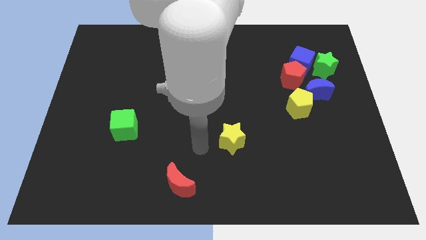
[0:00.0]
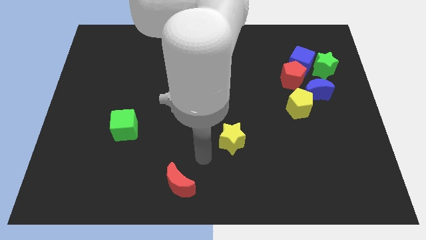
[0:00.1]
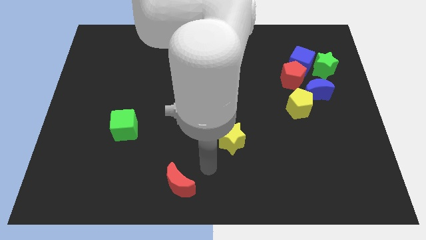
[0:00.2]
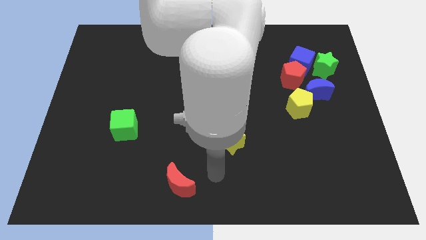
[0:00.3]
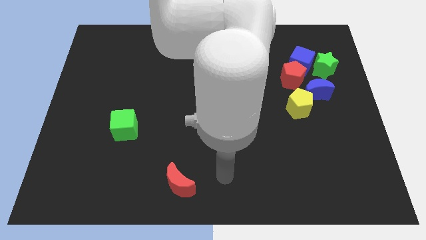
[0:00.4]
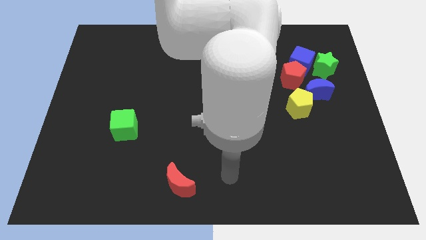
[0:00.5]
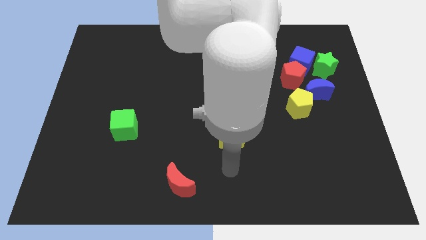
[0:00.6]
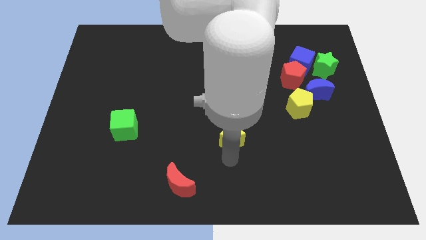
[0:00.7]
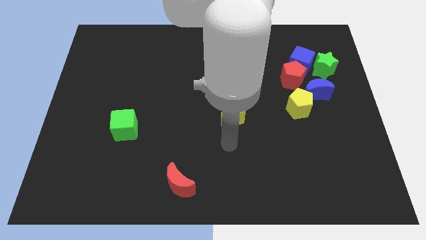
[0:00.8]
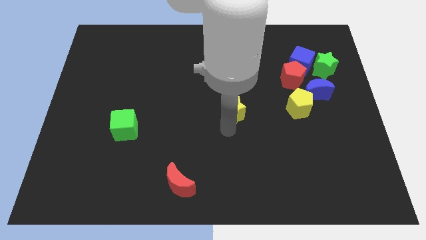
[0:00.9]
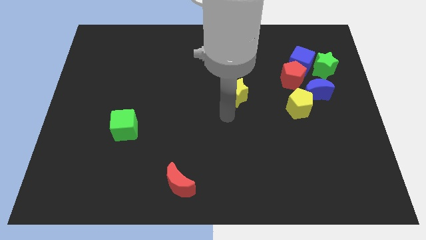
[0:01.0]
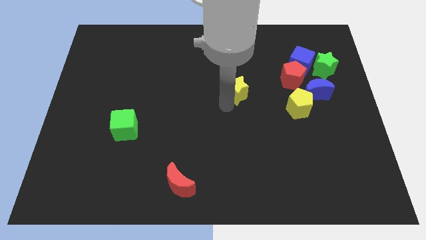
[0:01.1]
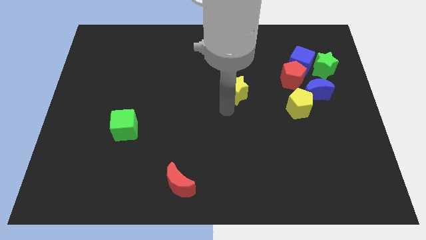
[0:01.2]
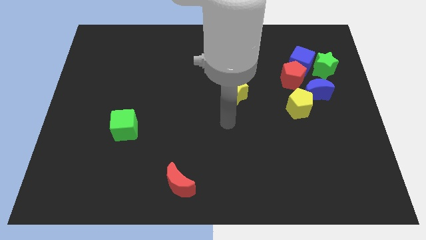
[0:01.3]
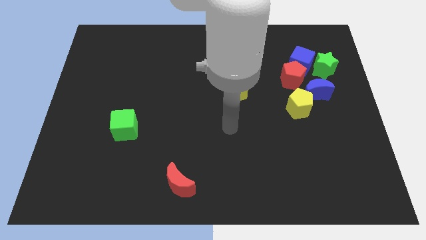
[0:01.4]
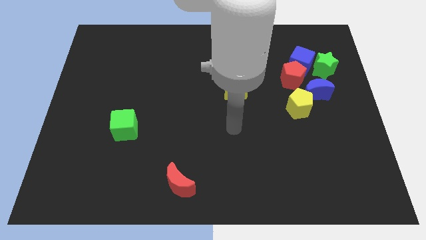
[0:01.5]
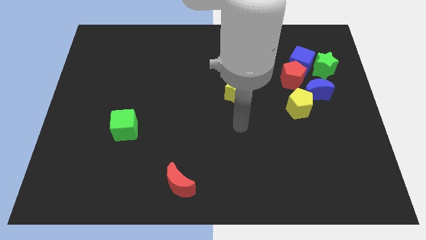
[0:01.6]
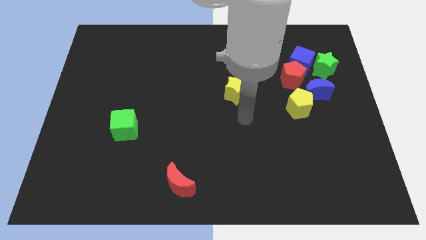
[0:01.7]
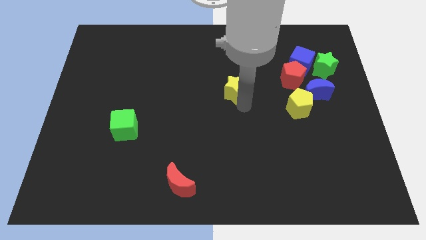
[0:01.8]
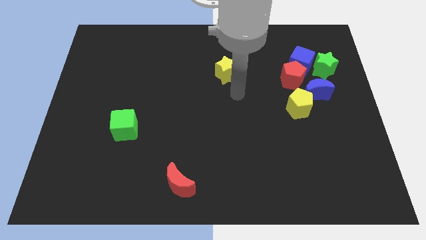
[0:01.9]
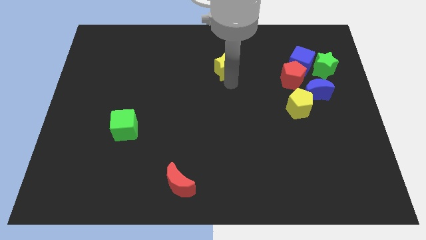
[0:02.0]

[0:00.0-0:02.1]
place the yellow star parallel to red pentagon

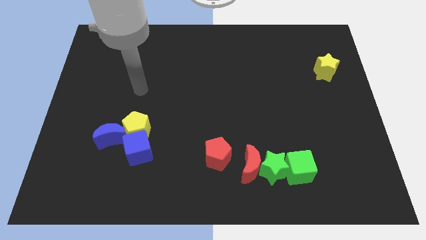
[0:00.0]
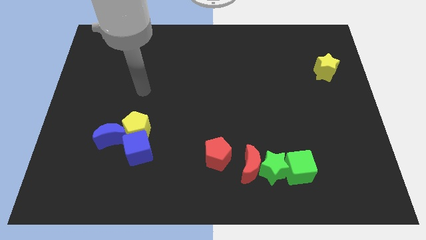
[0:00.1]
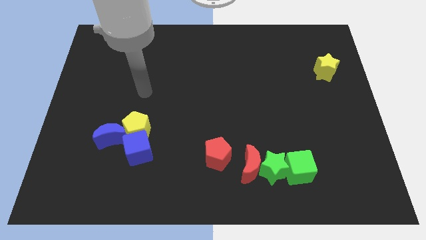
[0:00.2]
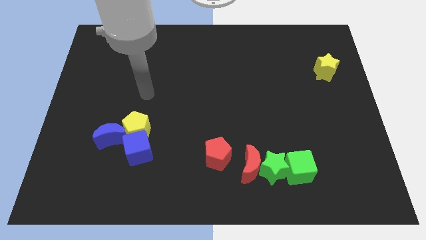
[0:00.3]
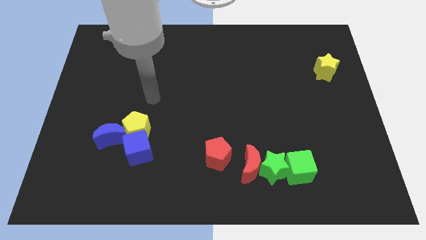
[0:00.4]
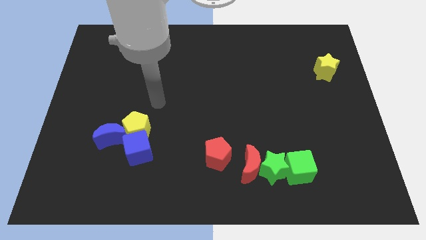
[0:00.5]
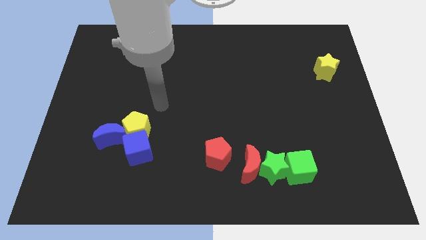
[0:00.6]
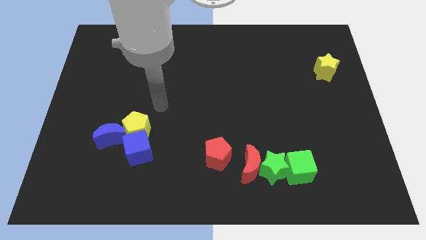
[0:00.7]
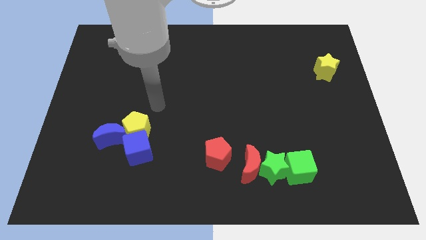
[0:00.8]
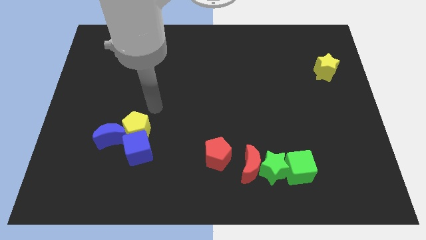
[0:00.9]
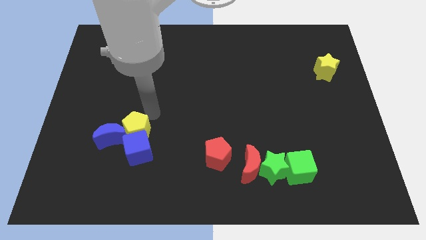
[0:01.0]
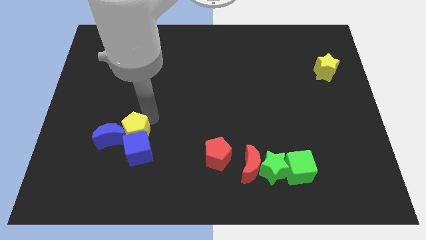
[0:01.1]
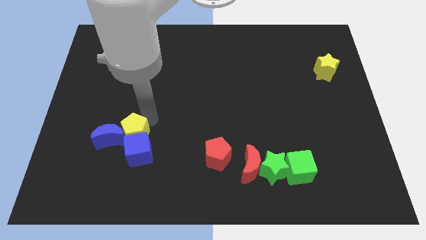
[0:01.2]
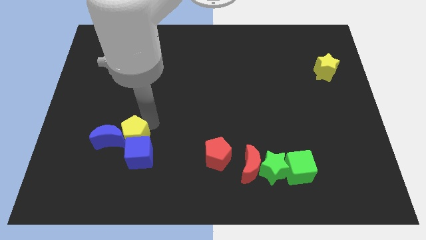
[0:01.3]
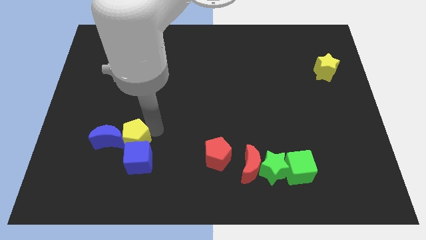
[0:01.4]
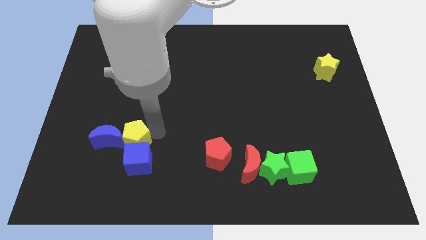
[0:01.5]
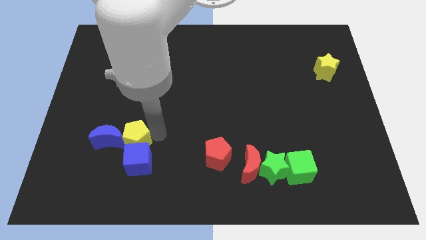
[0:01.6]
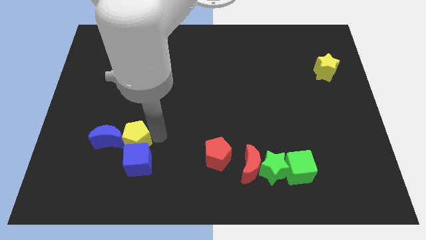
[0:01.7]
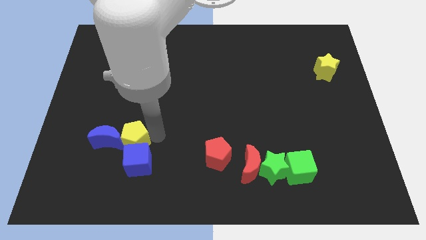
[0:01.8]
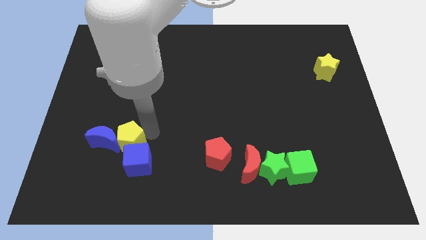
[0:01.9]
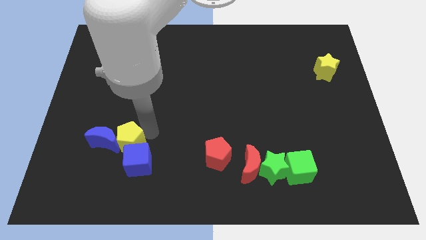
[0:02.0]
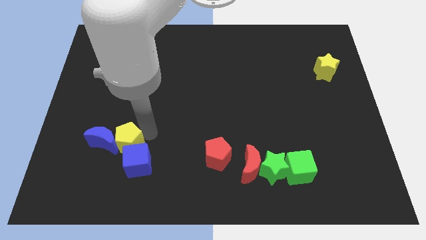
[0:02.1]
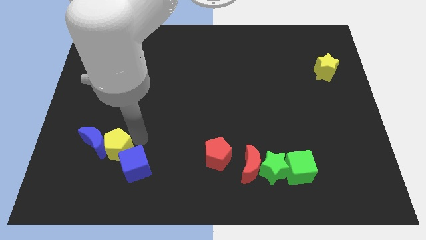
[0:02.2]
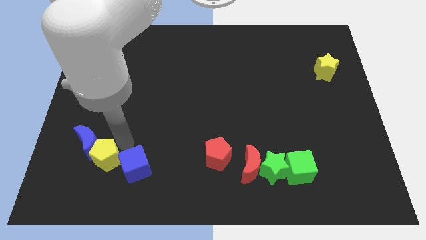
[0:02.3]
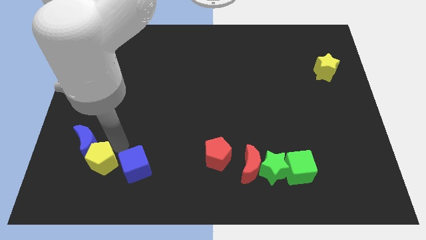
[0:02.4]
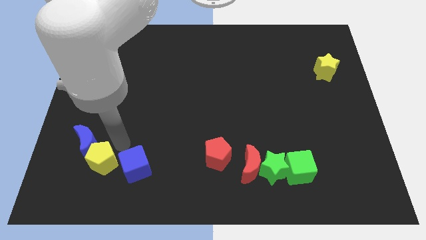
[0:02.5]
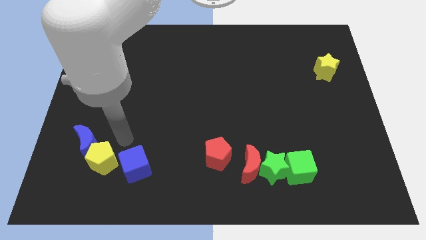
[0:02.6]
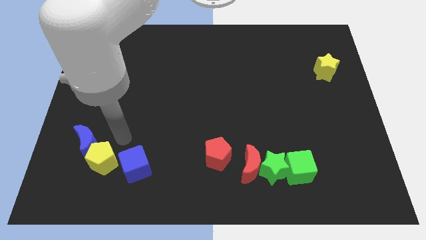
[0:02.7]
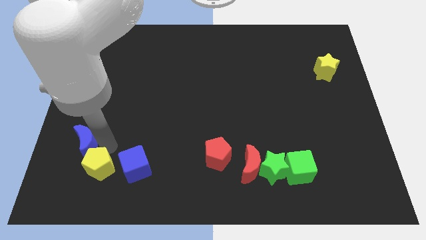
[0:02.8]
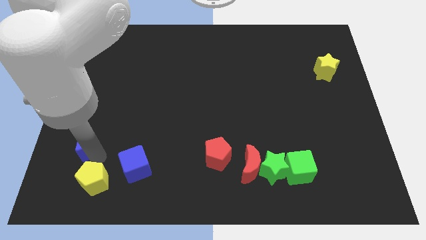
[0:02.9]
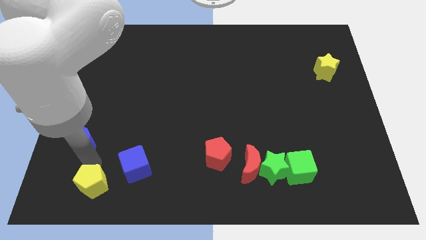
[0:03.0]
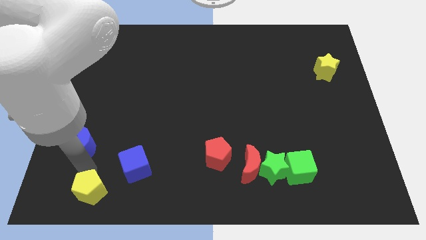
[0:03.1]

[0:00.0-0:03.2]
place the yellow pentagon below the blue crescent

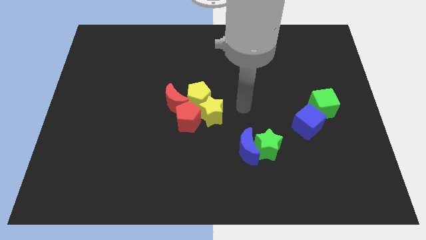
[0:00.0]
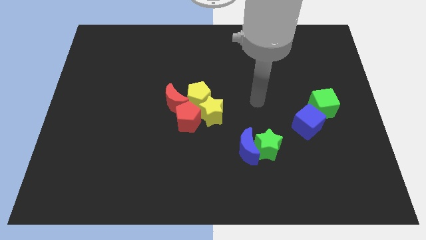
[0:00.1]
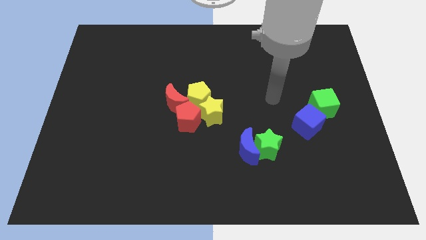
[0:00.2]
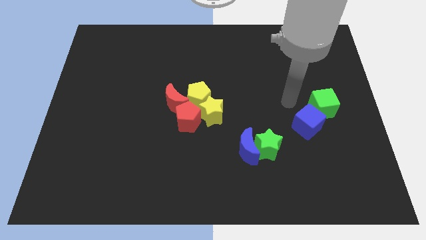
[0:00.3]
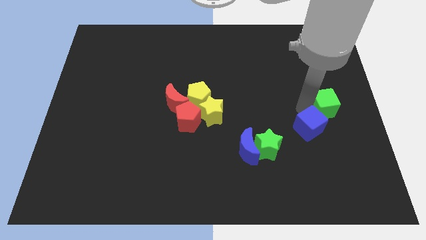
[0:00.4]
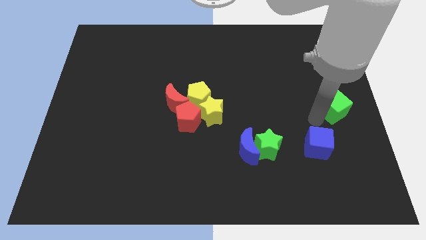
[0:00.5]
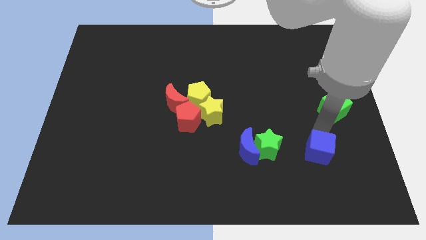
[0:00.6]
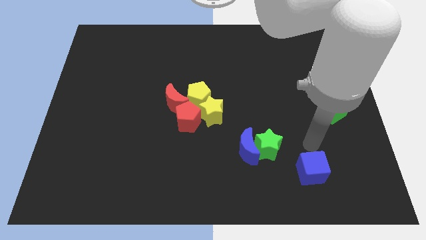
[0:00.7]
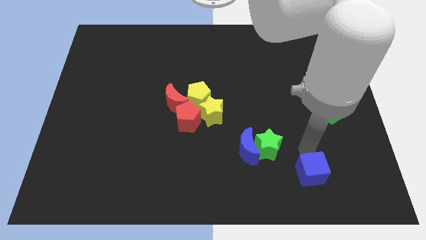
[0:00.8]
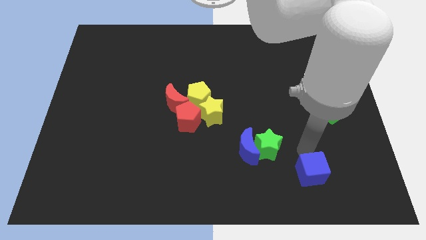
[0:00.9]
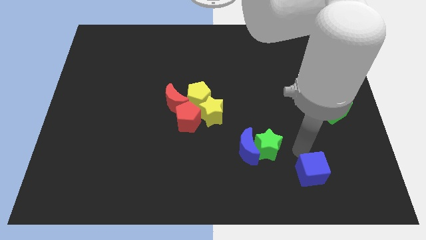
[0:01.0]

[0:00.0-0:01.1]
separate the cubes

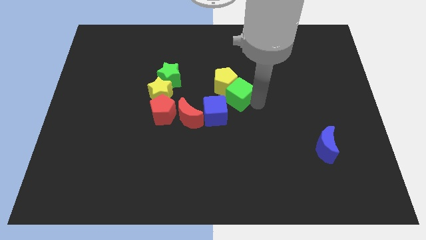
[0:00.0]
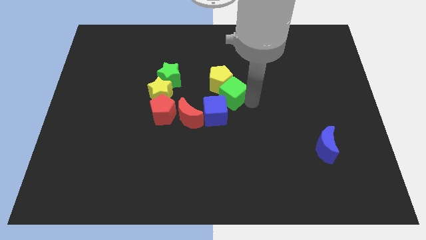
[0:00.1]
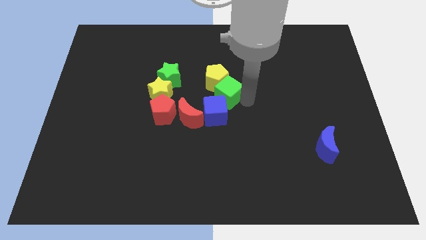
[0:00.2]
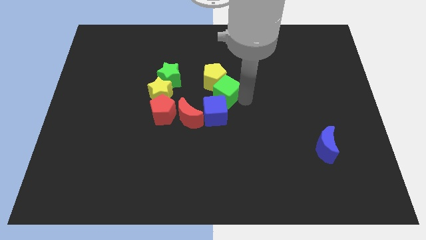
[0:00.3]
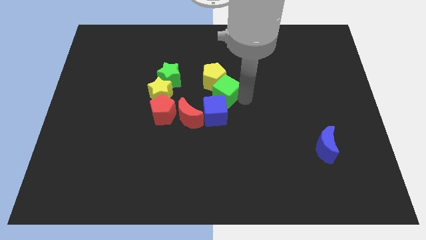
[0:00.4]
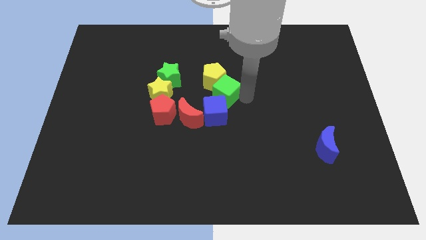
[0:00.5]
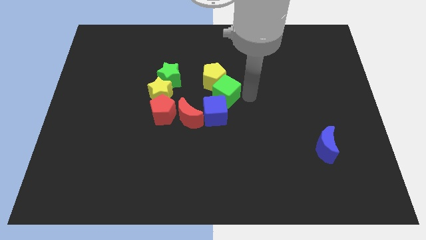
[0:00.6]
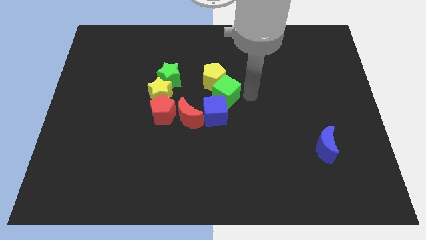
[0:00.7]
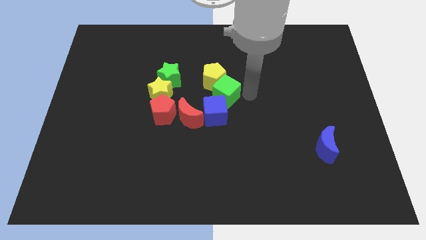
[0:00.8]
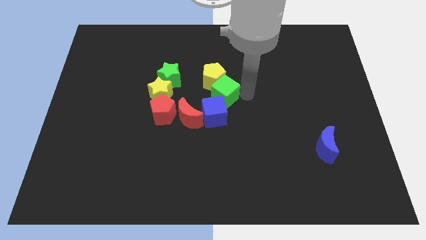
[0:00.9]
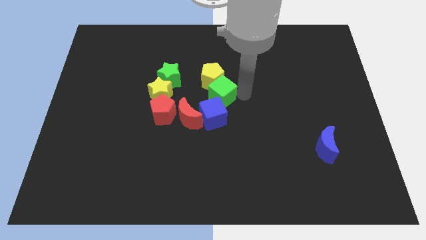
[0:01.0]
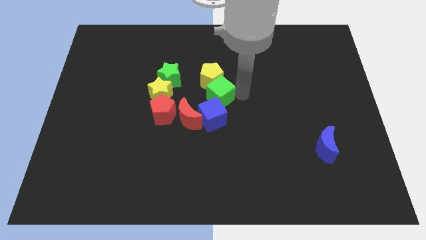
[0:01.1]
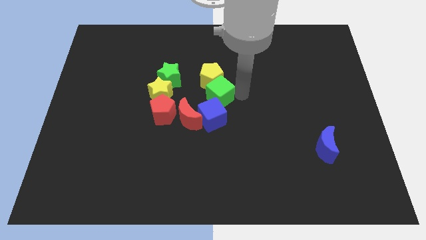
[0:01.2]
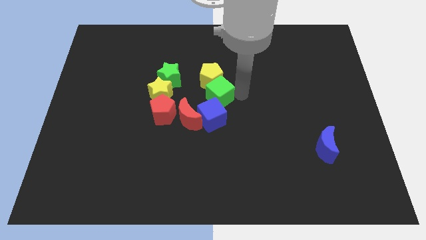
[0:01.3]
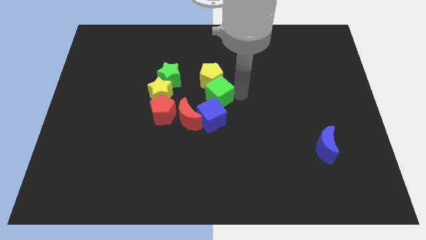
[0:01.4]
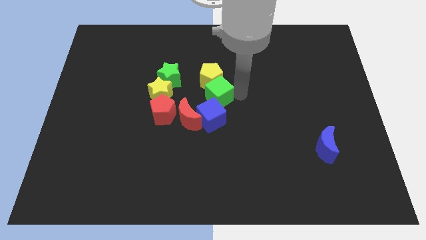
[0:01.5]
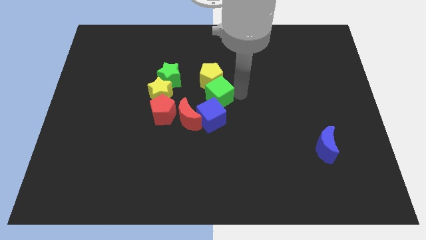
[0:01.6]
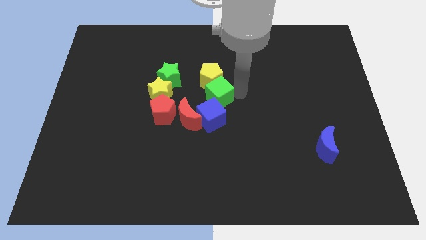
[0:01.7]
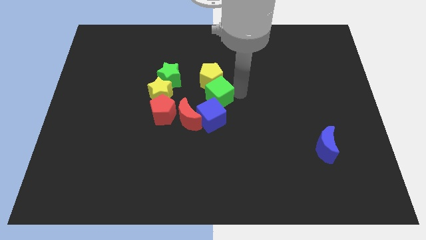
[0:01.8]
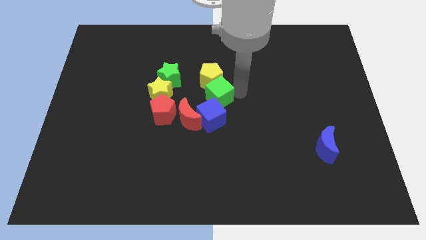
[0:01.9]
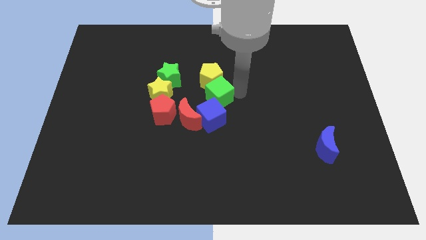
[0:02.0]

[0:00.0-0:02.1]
push the green cube and yellow pentagon to the top side of the blue cube

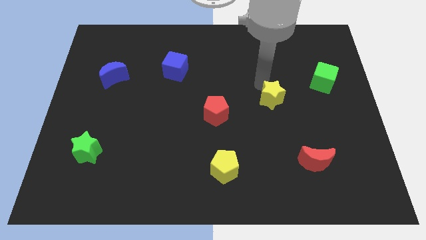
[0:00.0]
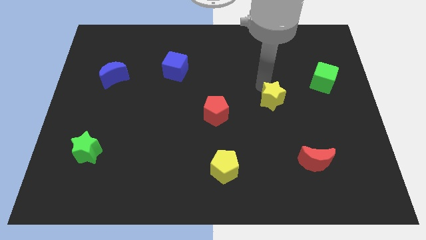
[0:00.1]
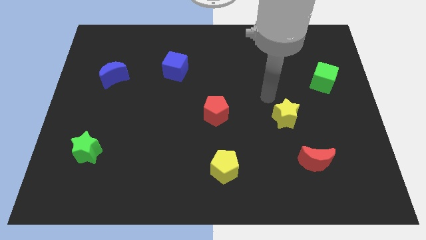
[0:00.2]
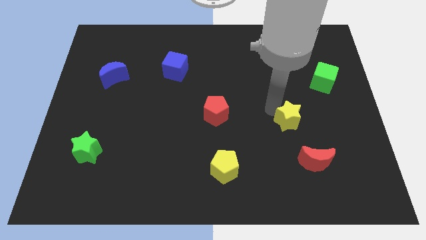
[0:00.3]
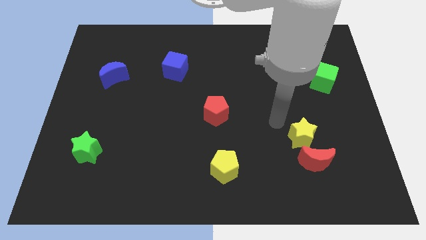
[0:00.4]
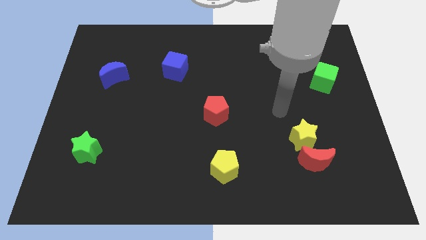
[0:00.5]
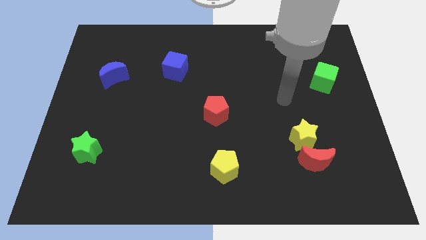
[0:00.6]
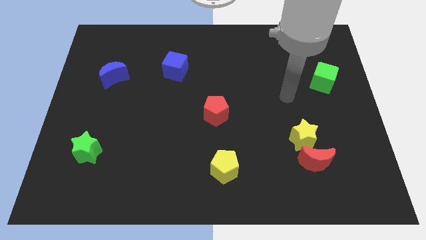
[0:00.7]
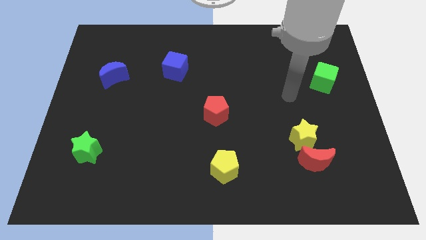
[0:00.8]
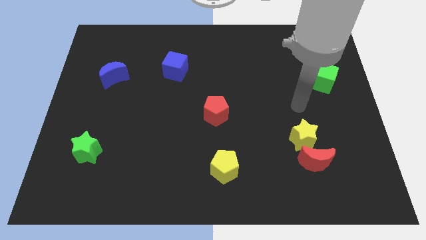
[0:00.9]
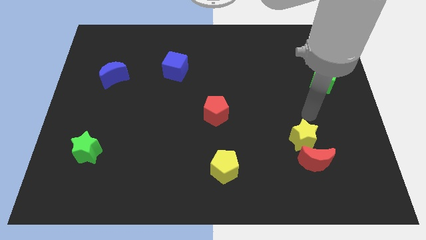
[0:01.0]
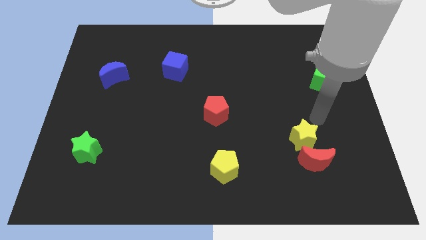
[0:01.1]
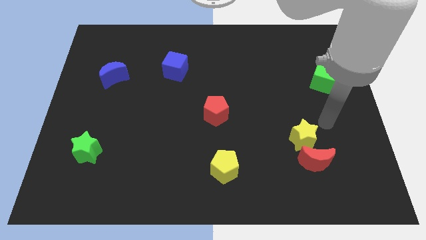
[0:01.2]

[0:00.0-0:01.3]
push the yellow star above the red crescent
